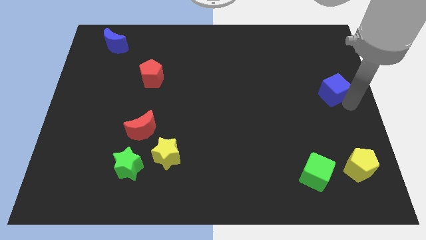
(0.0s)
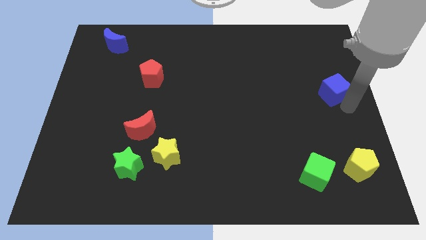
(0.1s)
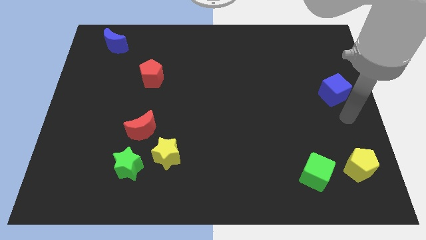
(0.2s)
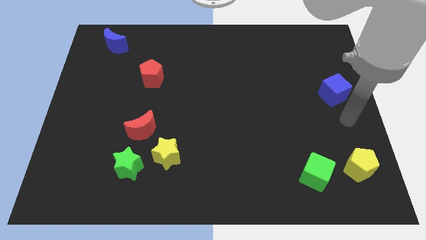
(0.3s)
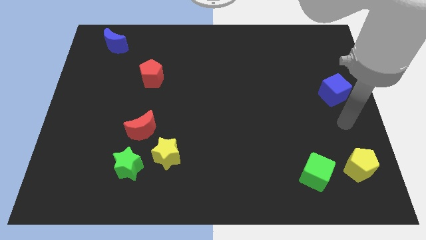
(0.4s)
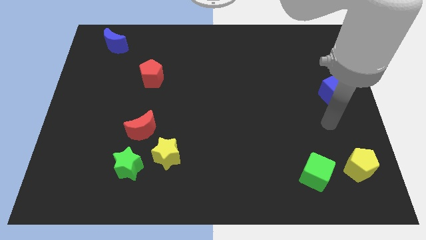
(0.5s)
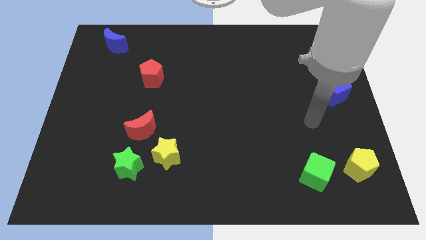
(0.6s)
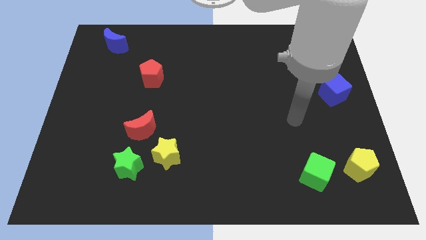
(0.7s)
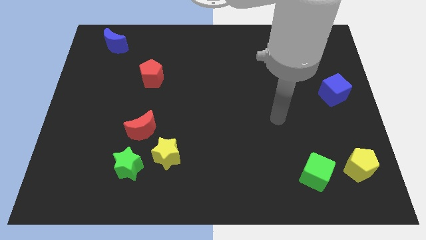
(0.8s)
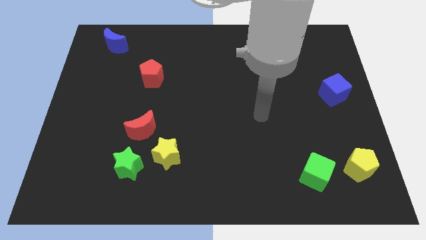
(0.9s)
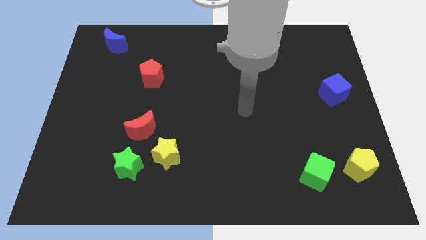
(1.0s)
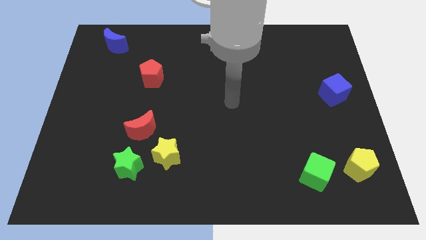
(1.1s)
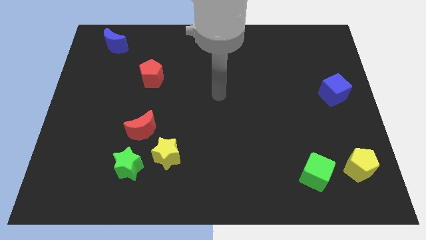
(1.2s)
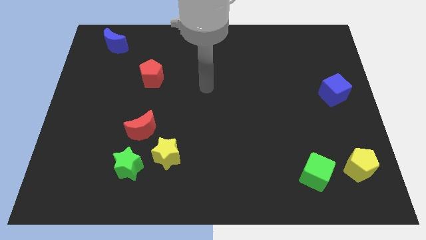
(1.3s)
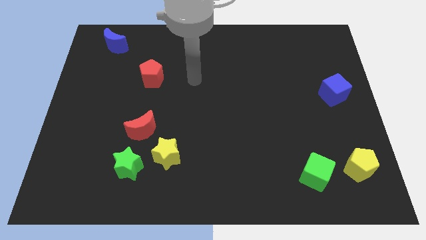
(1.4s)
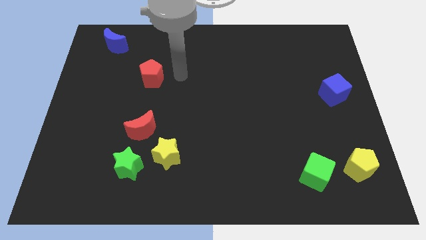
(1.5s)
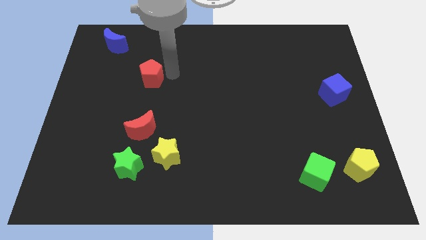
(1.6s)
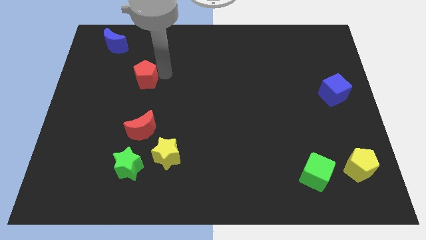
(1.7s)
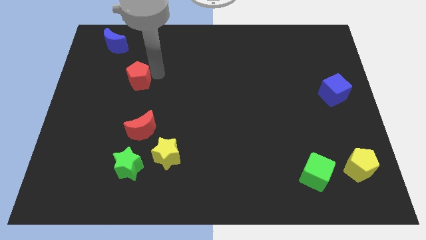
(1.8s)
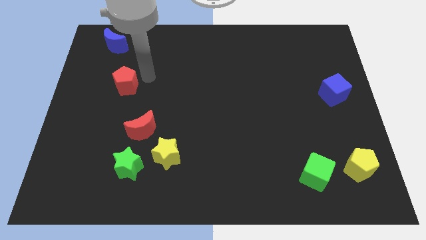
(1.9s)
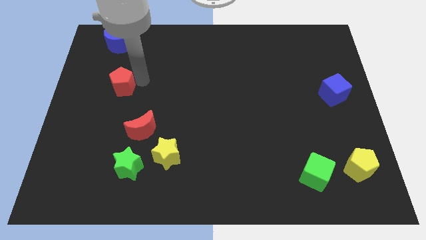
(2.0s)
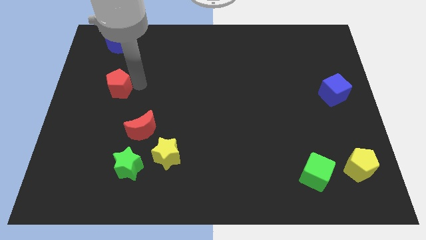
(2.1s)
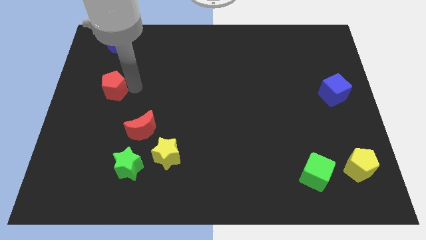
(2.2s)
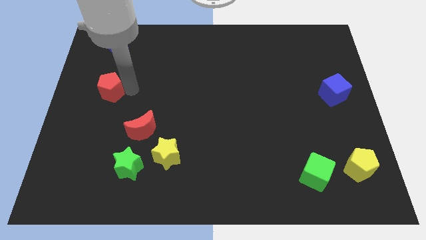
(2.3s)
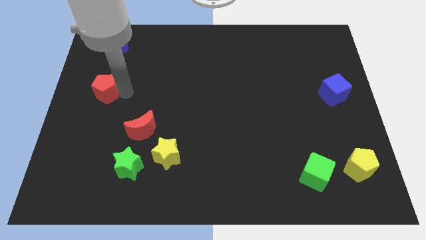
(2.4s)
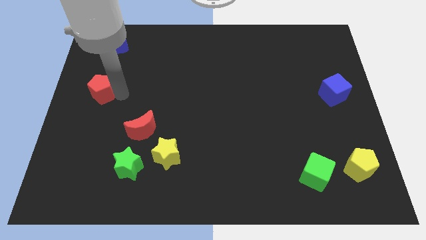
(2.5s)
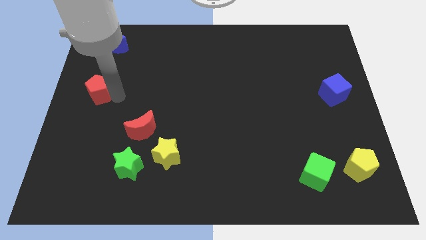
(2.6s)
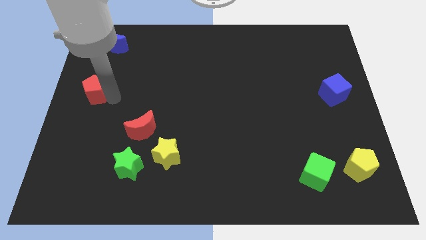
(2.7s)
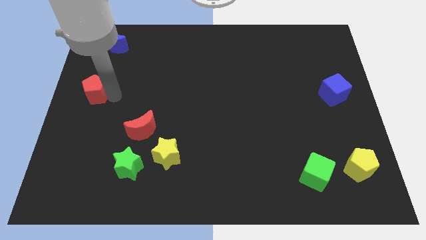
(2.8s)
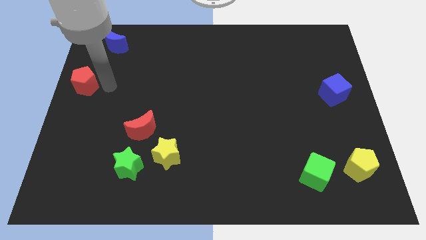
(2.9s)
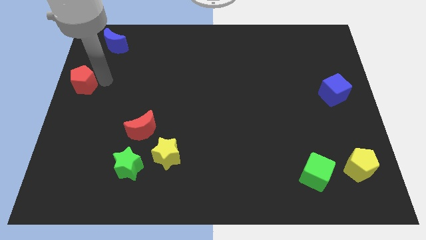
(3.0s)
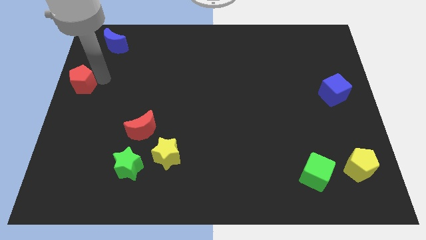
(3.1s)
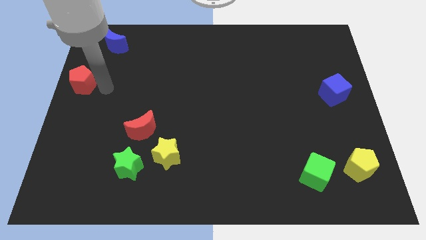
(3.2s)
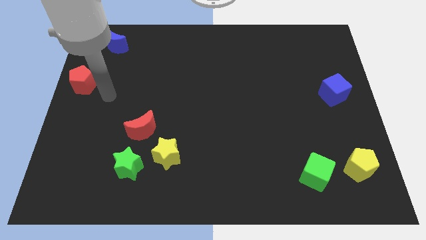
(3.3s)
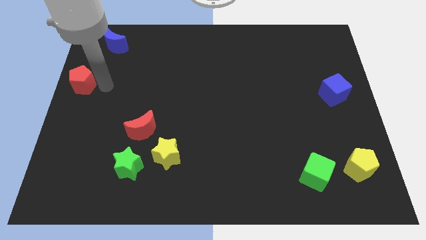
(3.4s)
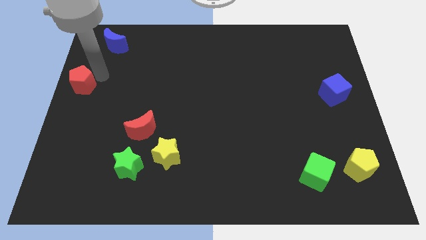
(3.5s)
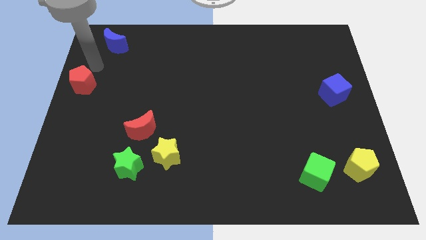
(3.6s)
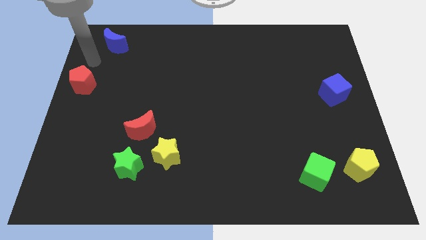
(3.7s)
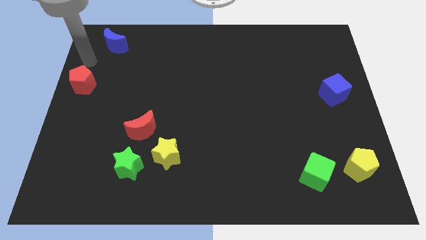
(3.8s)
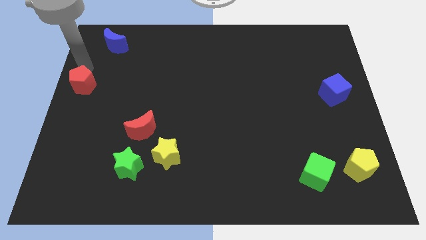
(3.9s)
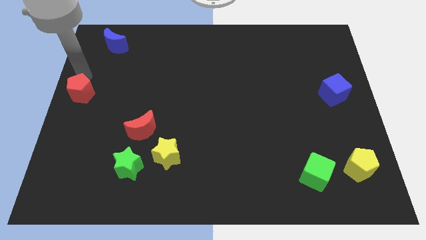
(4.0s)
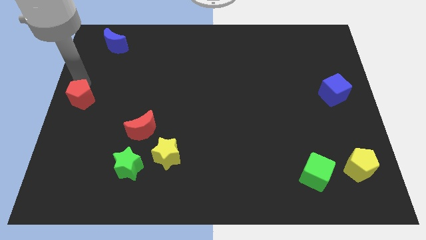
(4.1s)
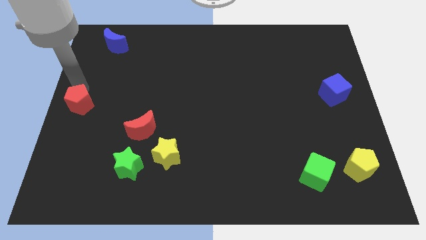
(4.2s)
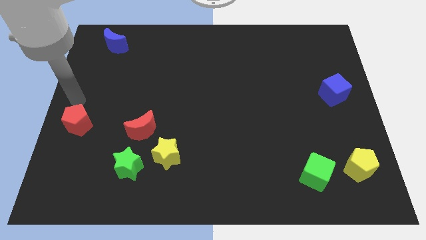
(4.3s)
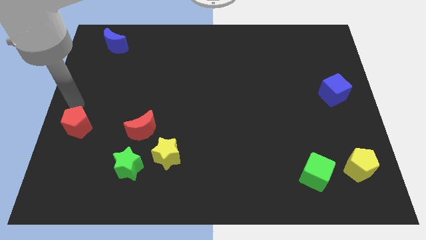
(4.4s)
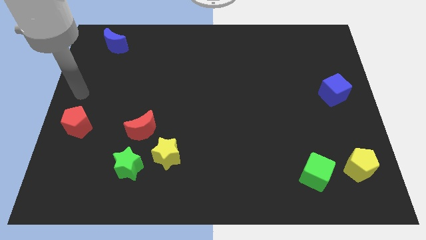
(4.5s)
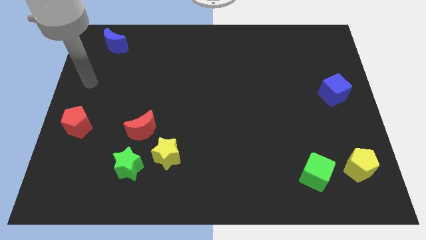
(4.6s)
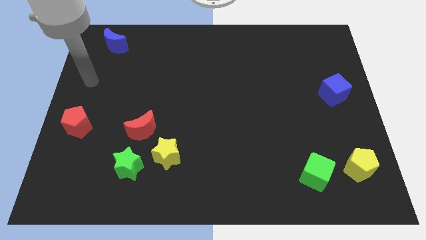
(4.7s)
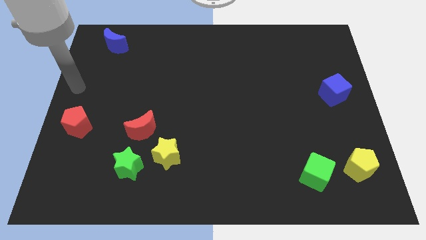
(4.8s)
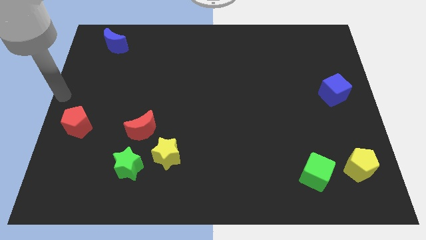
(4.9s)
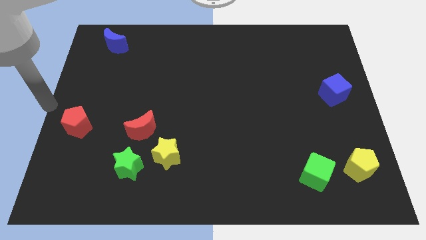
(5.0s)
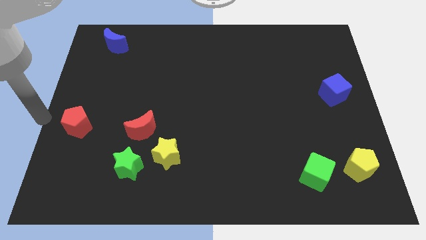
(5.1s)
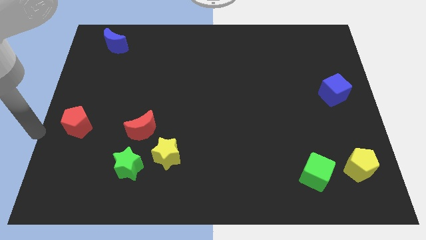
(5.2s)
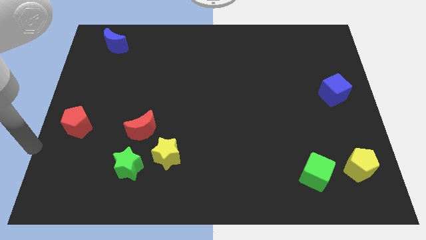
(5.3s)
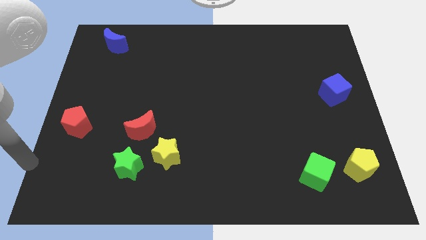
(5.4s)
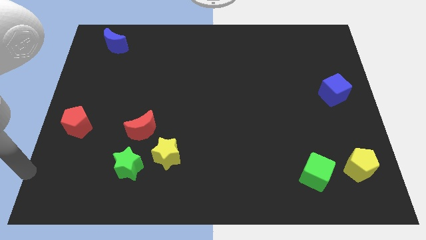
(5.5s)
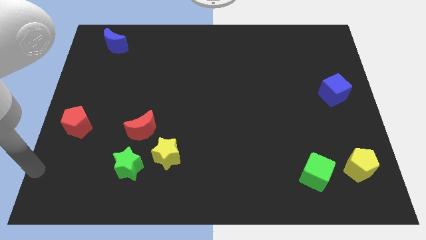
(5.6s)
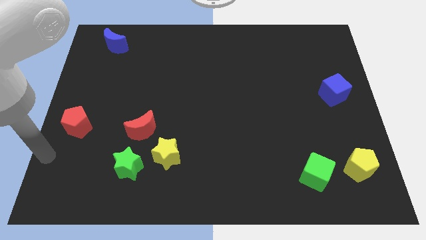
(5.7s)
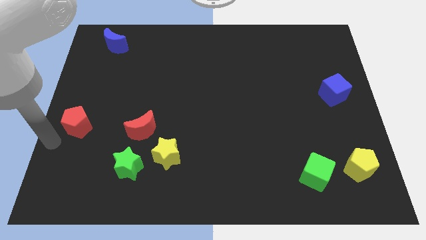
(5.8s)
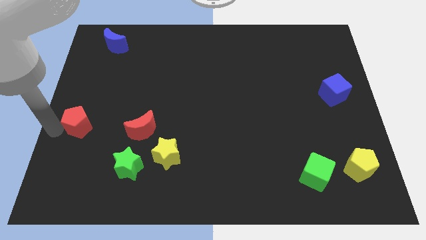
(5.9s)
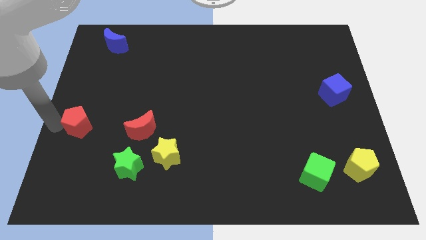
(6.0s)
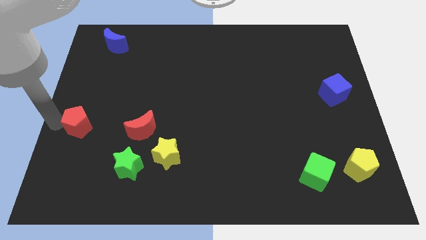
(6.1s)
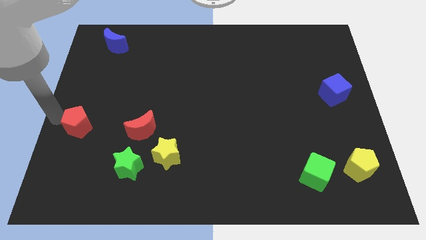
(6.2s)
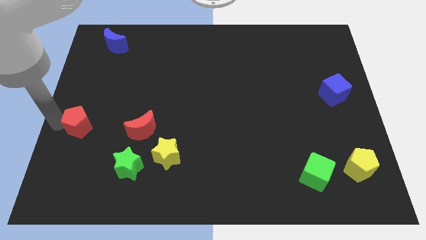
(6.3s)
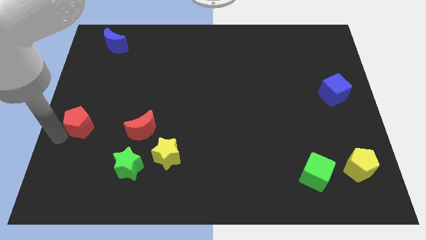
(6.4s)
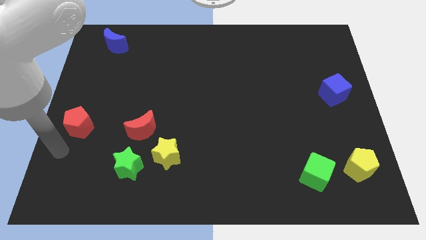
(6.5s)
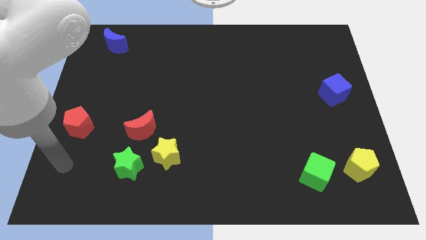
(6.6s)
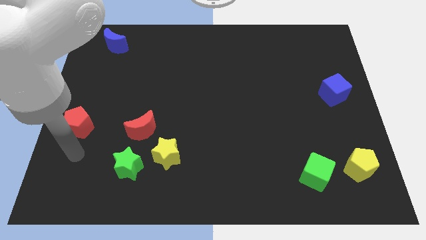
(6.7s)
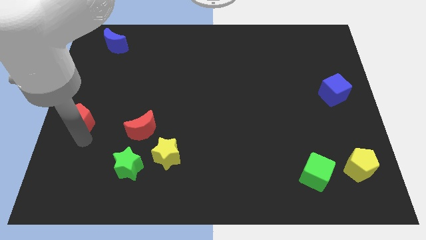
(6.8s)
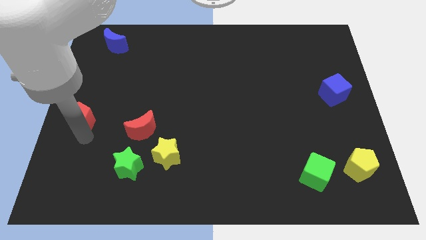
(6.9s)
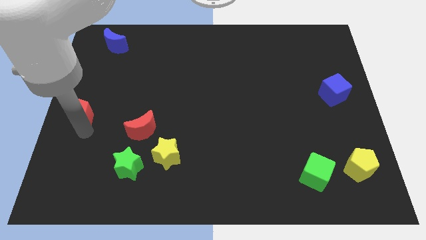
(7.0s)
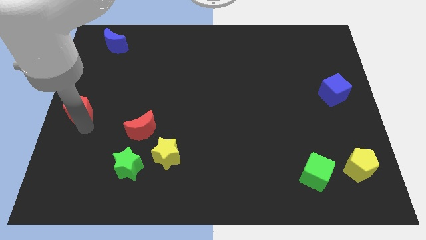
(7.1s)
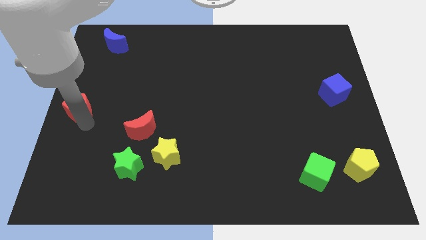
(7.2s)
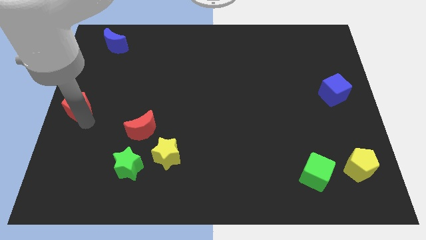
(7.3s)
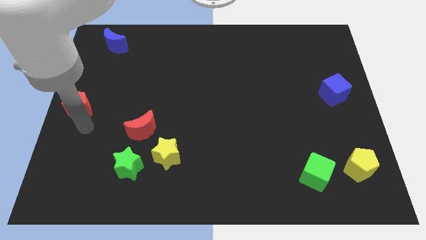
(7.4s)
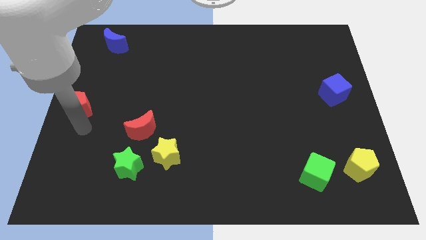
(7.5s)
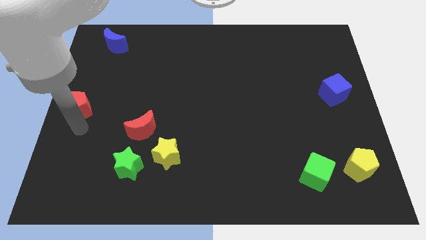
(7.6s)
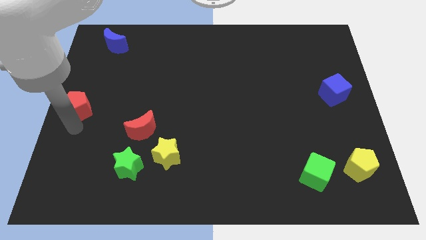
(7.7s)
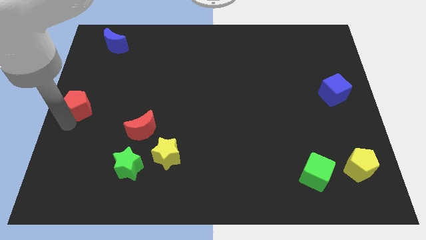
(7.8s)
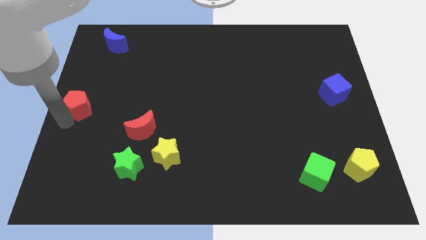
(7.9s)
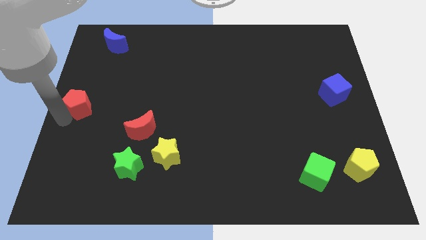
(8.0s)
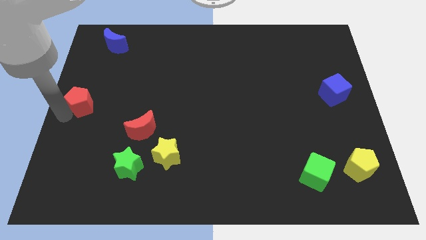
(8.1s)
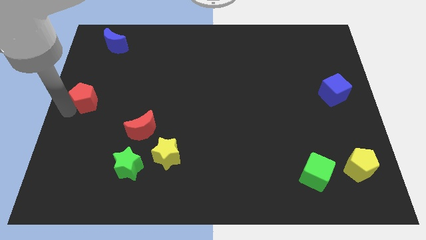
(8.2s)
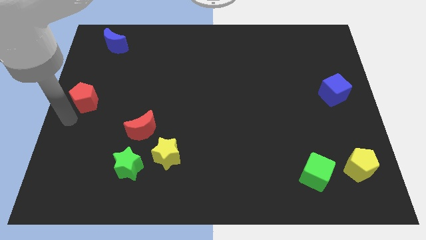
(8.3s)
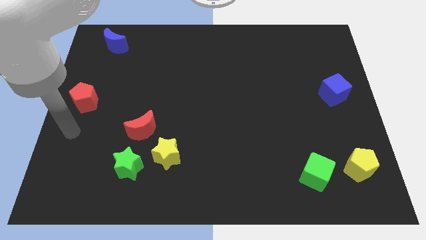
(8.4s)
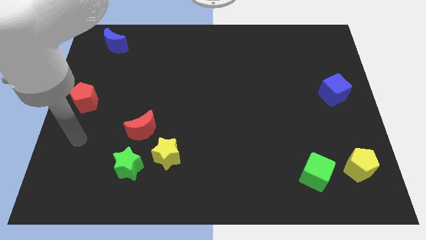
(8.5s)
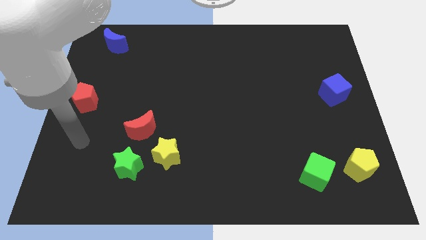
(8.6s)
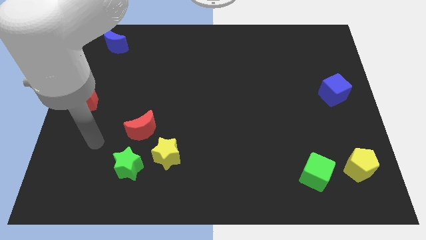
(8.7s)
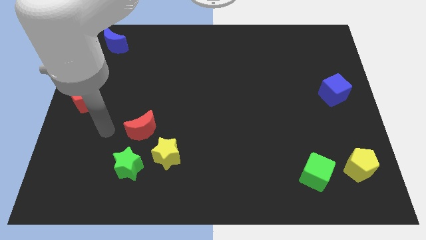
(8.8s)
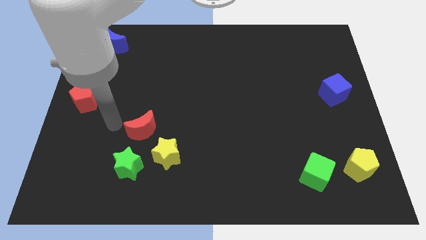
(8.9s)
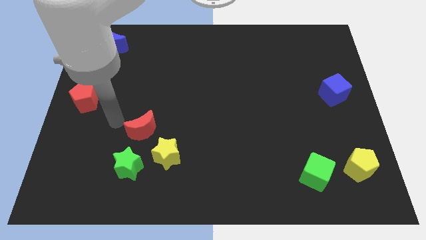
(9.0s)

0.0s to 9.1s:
slide the red pentagon at the left center corner
